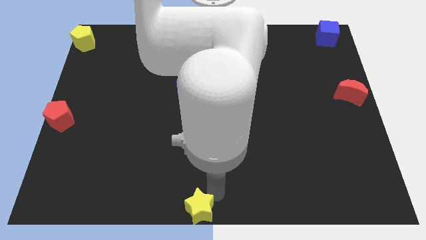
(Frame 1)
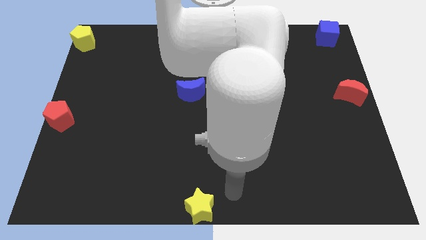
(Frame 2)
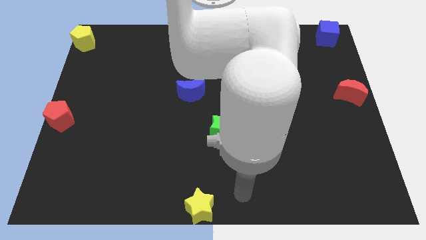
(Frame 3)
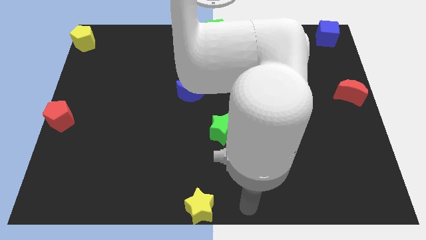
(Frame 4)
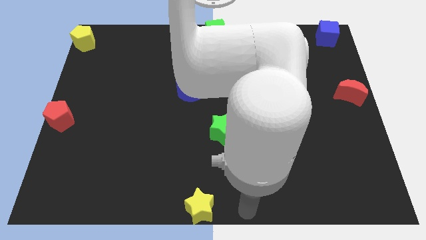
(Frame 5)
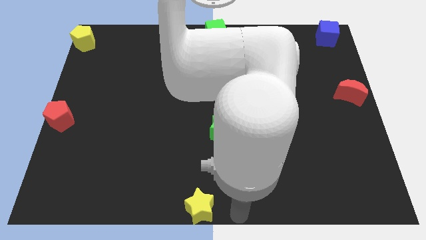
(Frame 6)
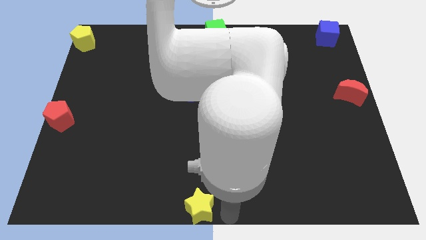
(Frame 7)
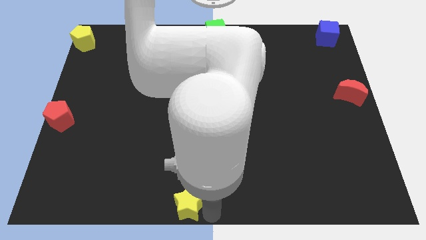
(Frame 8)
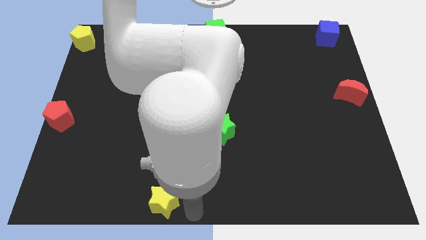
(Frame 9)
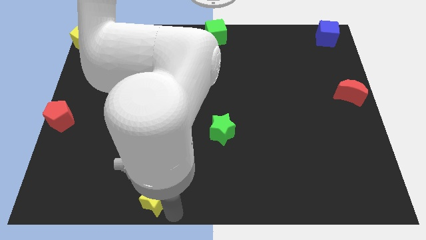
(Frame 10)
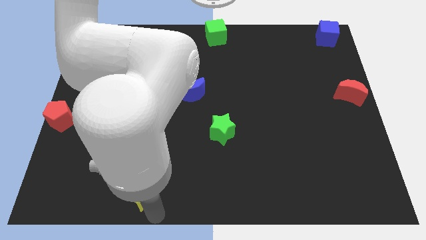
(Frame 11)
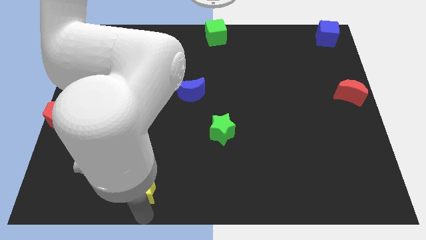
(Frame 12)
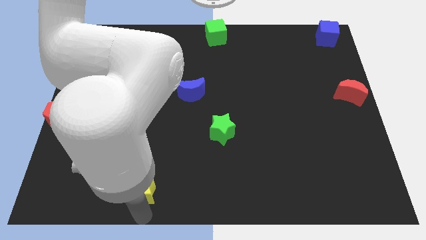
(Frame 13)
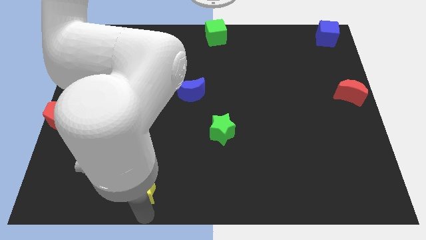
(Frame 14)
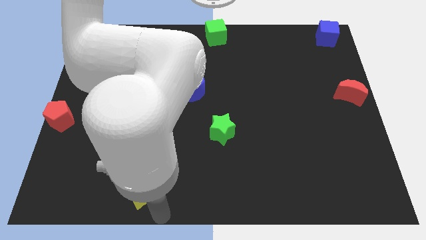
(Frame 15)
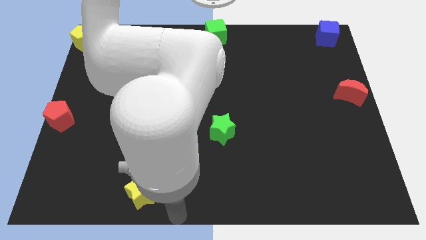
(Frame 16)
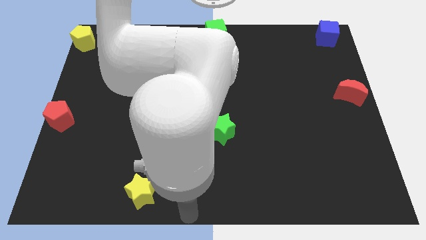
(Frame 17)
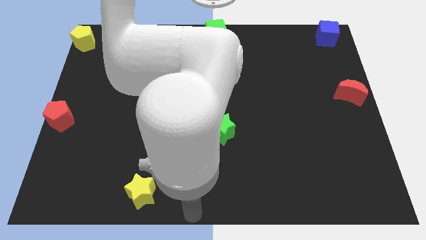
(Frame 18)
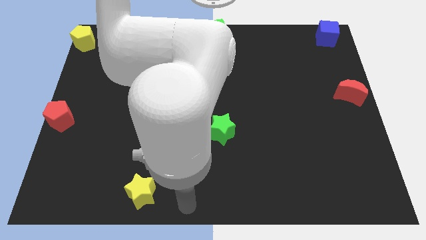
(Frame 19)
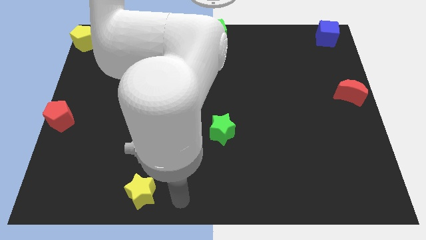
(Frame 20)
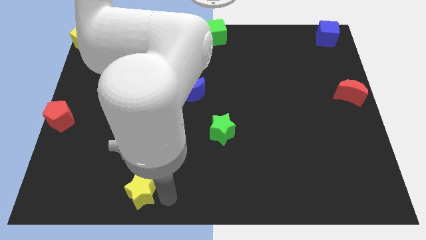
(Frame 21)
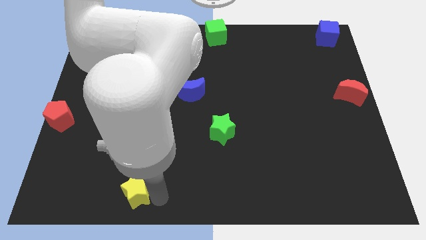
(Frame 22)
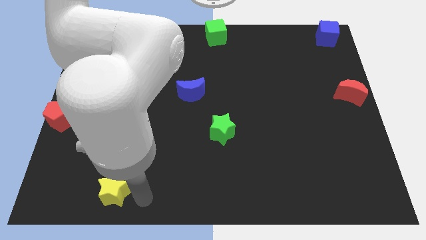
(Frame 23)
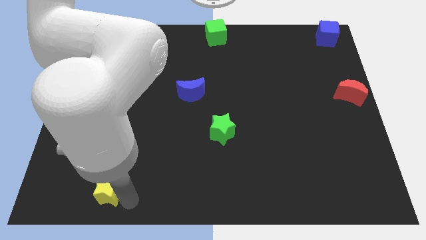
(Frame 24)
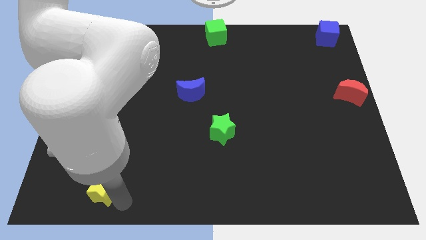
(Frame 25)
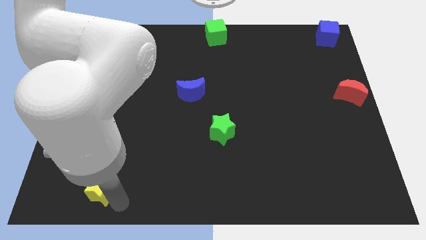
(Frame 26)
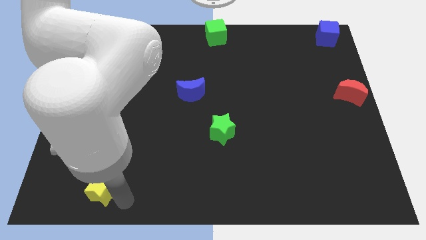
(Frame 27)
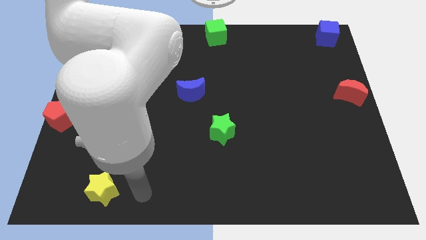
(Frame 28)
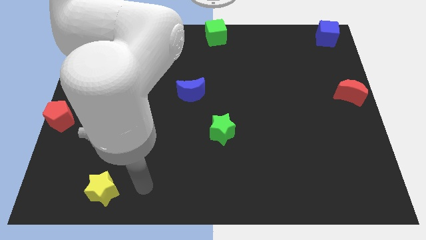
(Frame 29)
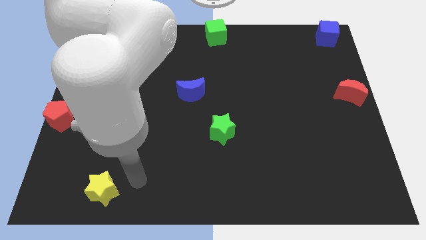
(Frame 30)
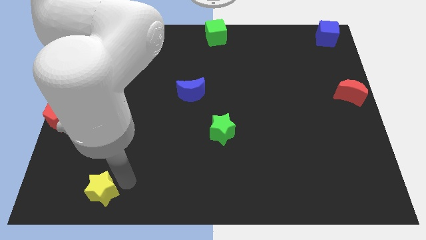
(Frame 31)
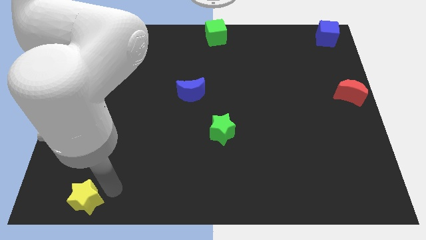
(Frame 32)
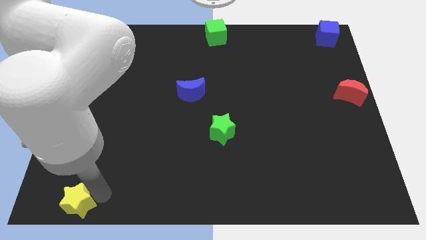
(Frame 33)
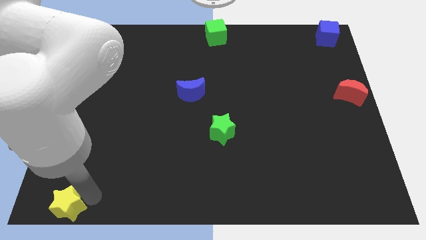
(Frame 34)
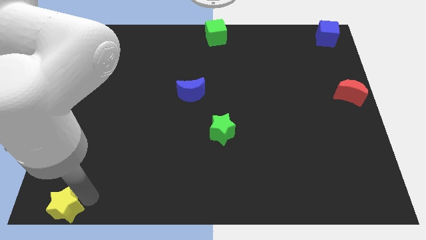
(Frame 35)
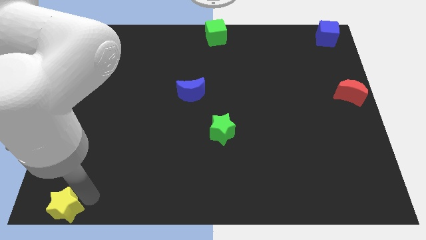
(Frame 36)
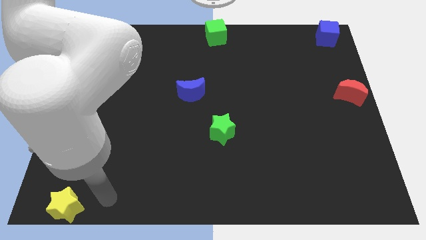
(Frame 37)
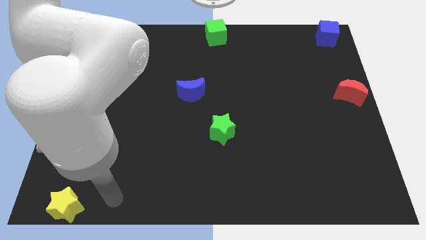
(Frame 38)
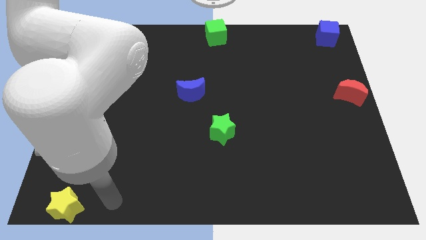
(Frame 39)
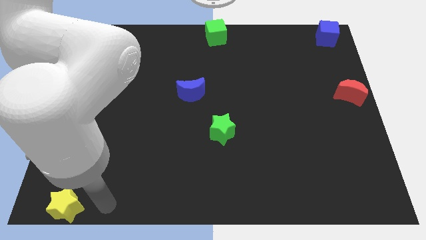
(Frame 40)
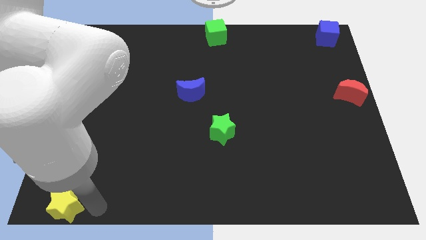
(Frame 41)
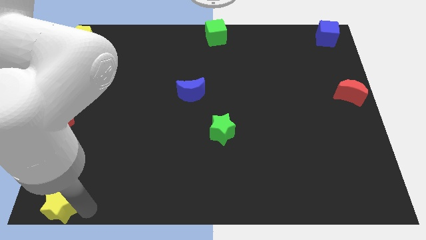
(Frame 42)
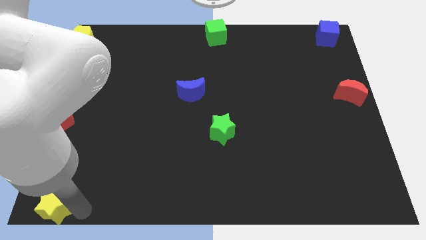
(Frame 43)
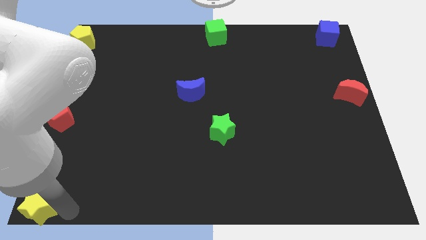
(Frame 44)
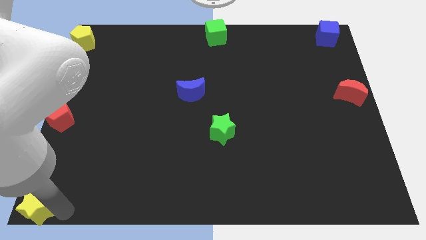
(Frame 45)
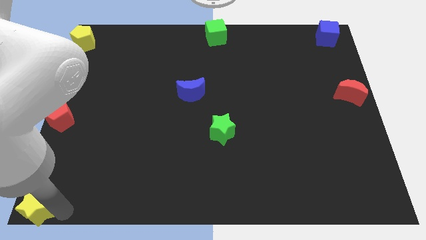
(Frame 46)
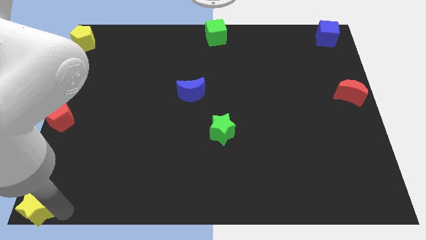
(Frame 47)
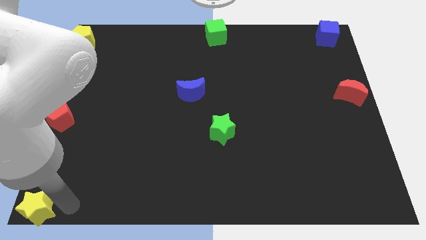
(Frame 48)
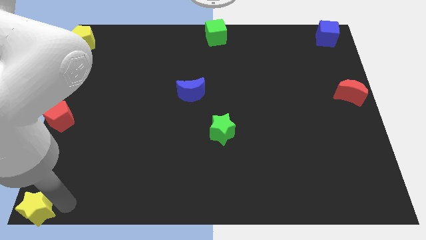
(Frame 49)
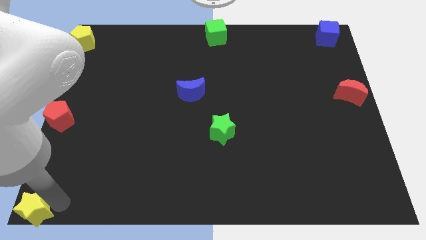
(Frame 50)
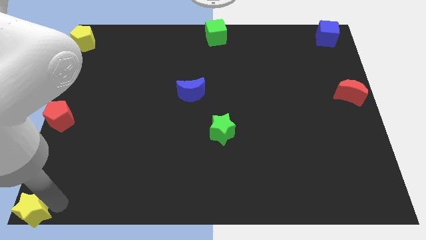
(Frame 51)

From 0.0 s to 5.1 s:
move the yellow star to the bottom left corner of the board

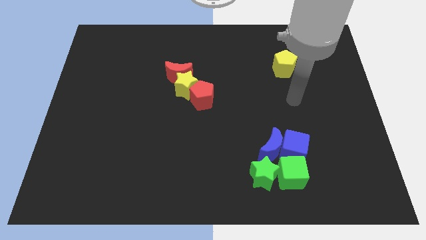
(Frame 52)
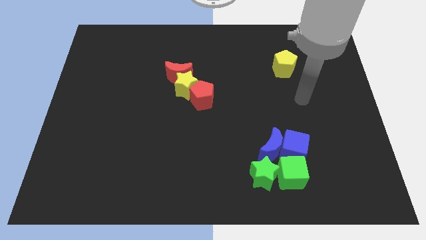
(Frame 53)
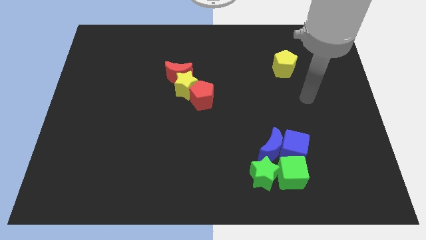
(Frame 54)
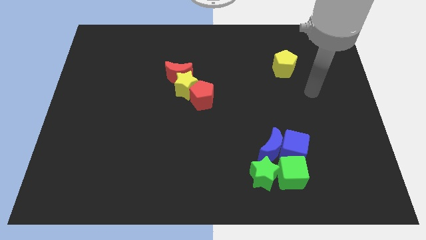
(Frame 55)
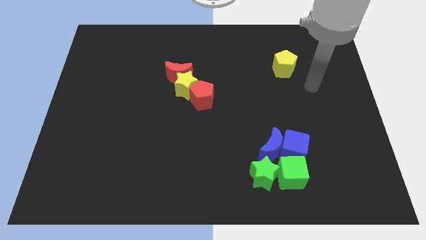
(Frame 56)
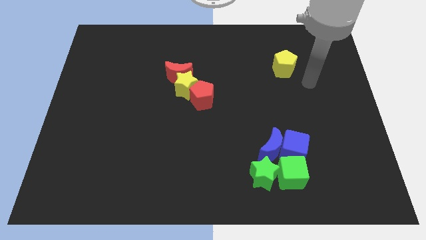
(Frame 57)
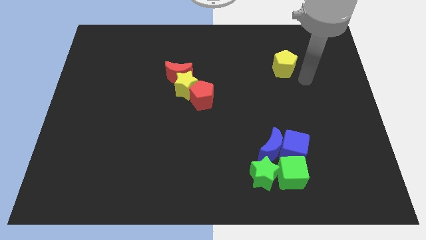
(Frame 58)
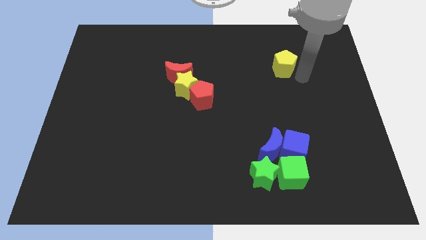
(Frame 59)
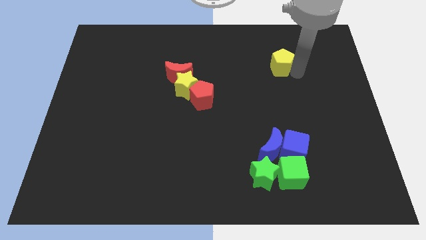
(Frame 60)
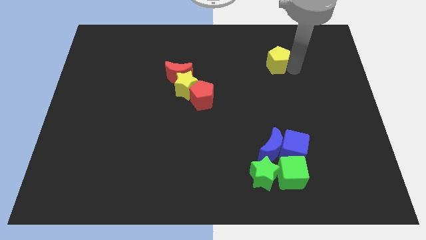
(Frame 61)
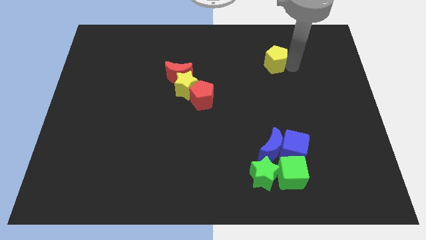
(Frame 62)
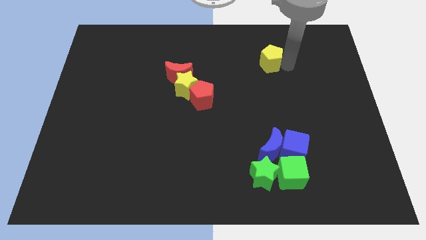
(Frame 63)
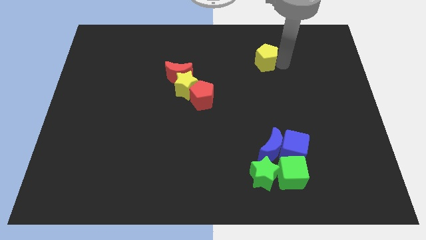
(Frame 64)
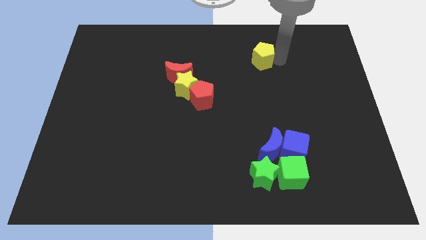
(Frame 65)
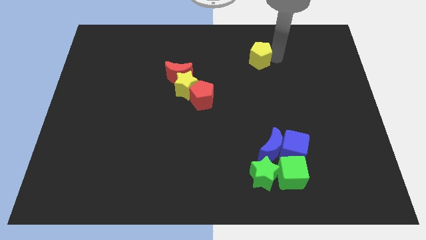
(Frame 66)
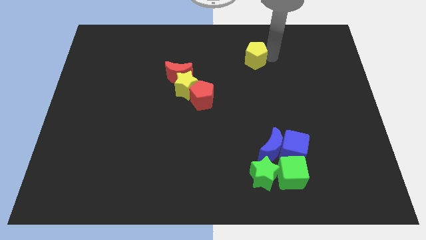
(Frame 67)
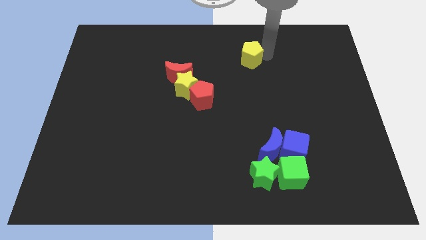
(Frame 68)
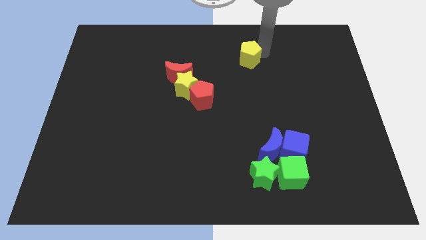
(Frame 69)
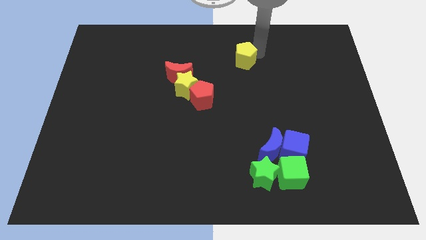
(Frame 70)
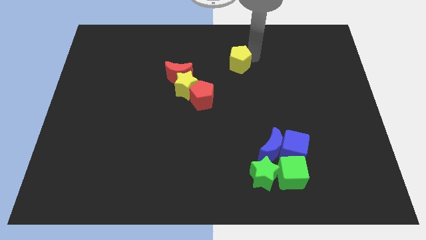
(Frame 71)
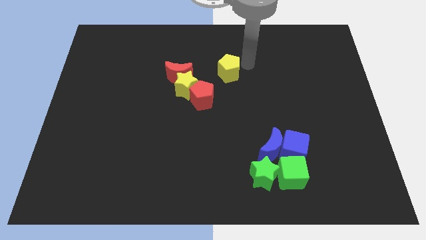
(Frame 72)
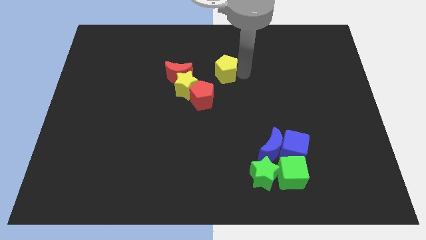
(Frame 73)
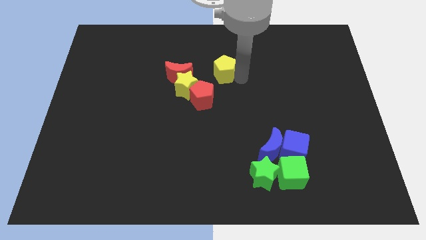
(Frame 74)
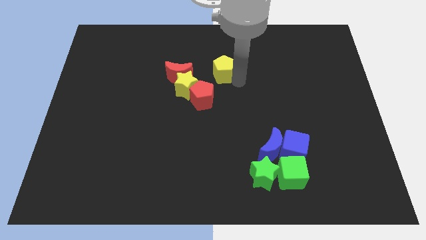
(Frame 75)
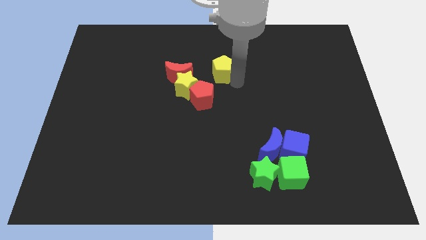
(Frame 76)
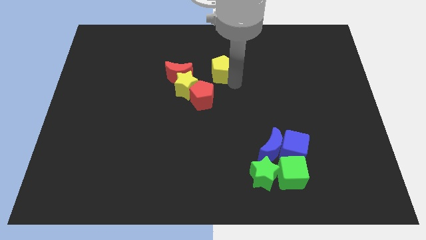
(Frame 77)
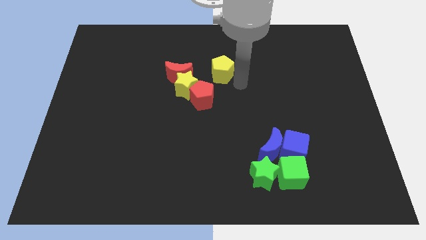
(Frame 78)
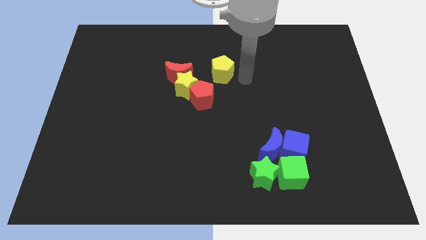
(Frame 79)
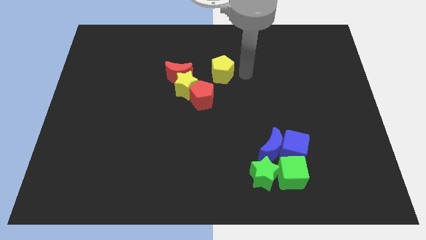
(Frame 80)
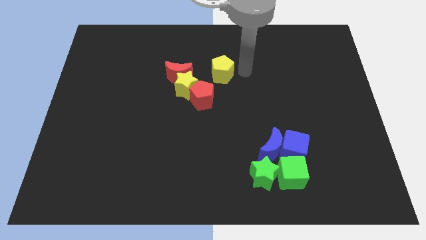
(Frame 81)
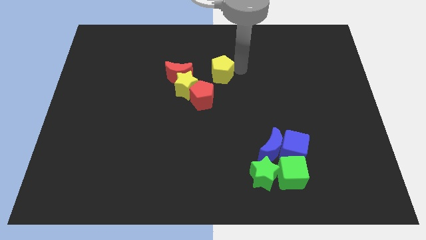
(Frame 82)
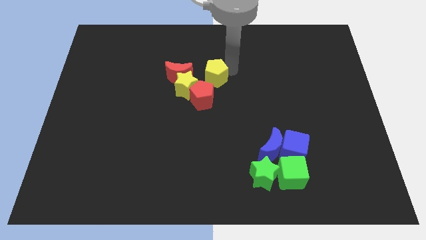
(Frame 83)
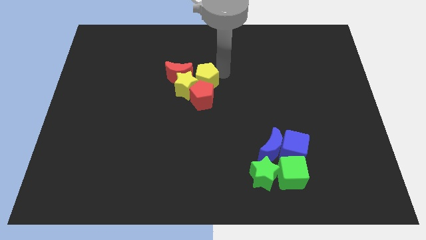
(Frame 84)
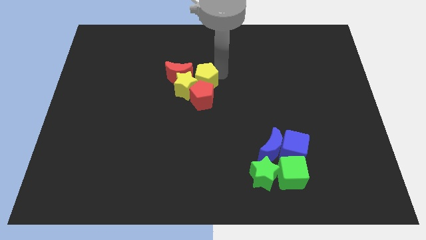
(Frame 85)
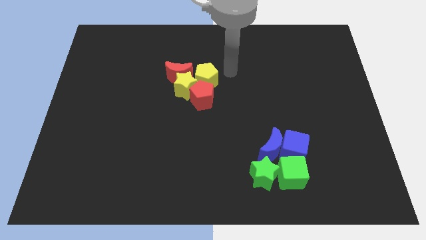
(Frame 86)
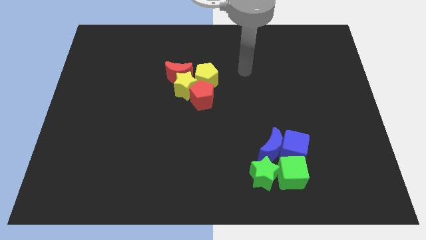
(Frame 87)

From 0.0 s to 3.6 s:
push the yellow pentagon to the top right of the red pentagon

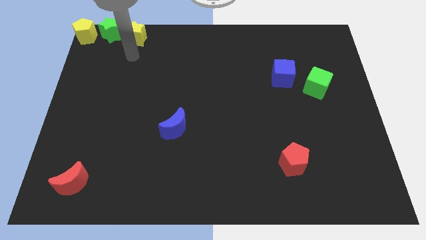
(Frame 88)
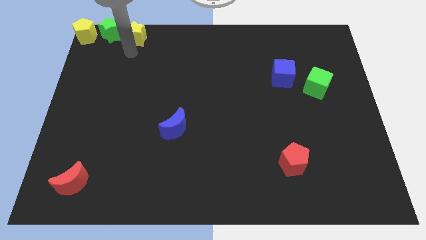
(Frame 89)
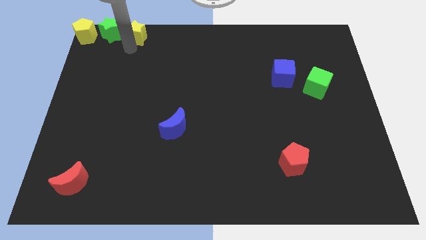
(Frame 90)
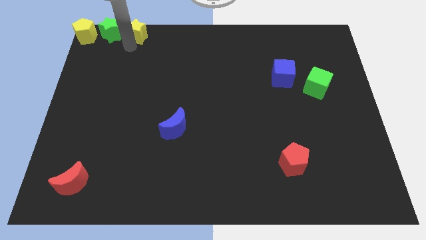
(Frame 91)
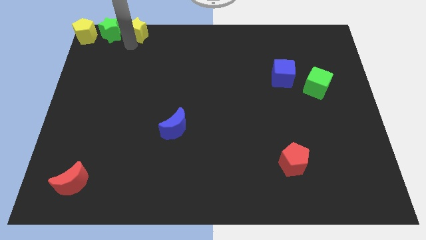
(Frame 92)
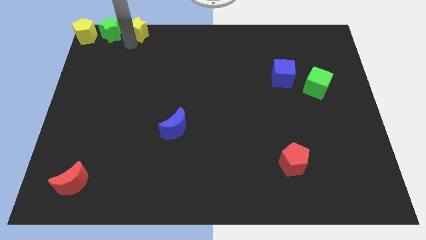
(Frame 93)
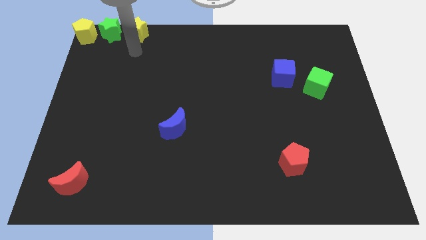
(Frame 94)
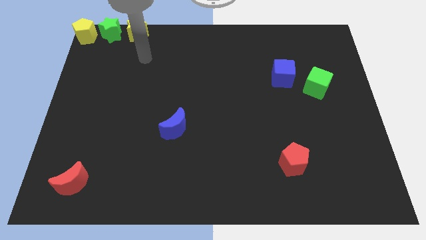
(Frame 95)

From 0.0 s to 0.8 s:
slide the yellow star to the top of the board
